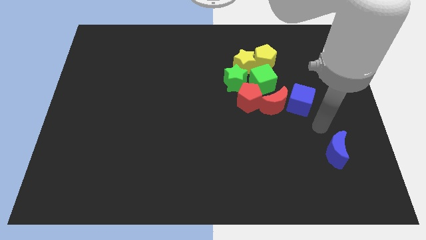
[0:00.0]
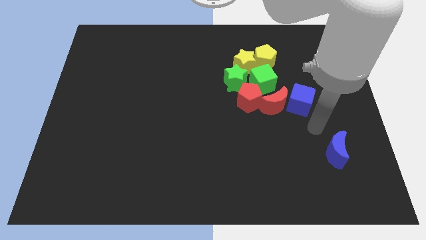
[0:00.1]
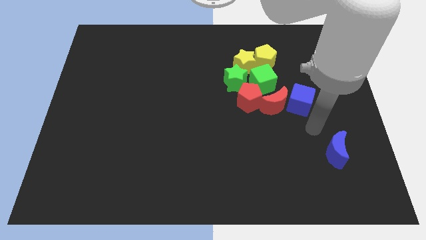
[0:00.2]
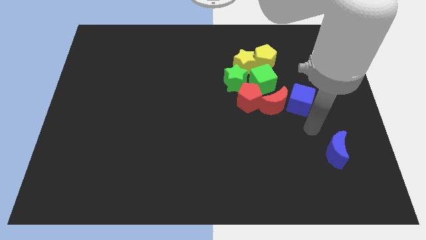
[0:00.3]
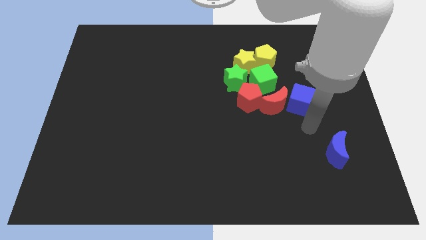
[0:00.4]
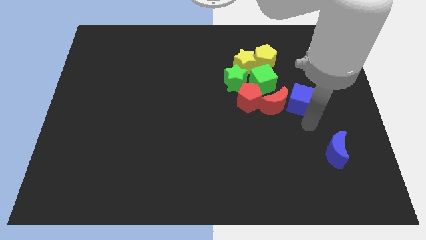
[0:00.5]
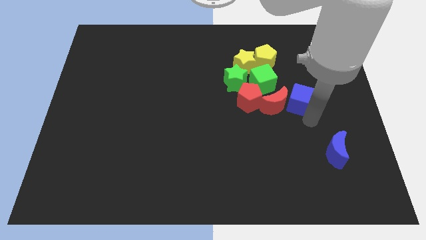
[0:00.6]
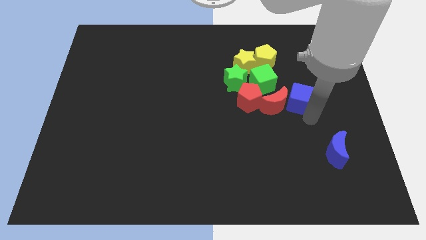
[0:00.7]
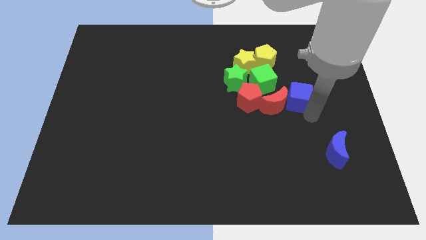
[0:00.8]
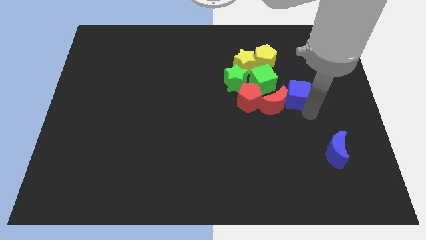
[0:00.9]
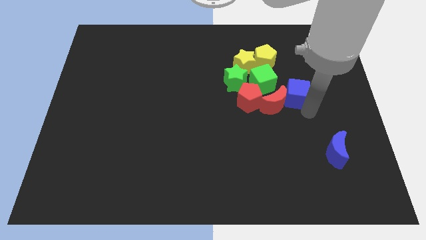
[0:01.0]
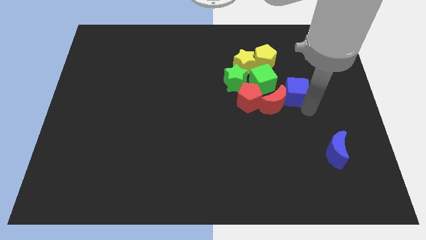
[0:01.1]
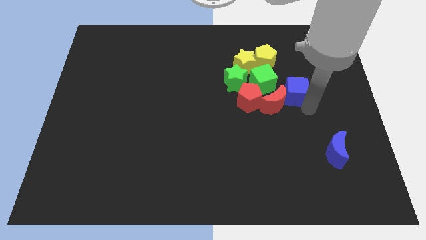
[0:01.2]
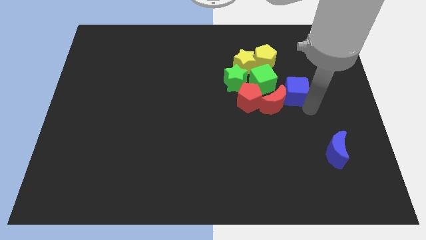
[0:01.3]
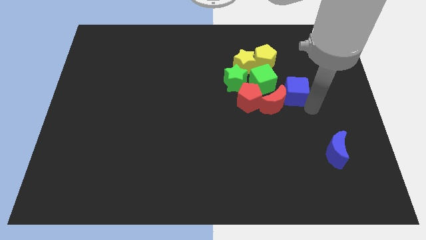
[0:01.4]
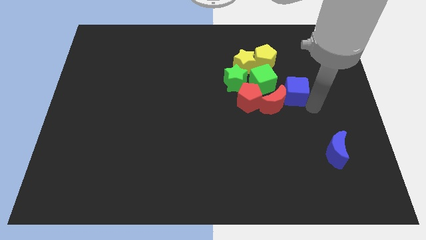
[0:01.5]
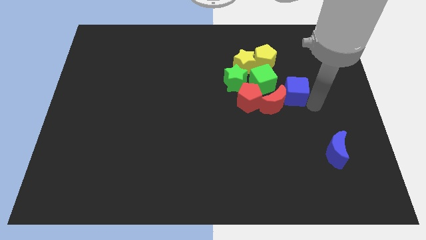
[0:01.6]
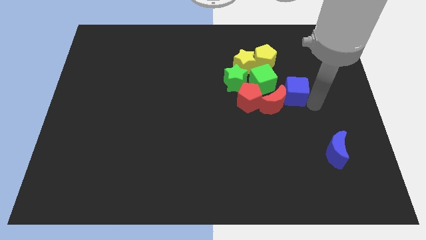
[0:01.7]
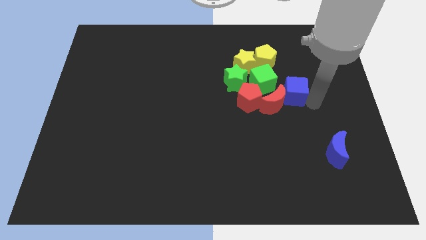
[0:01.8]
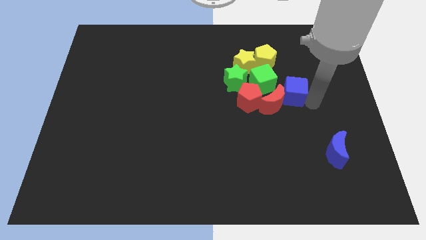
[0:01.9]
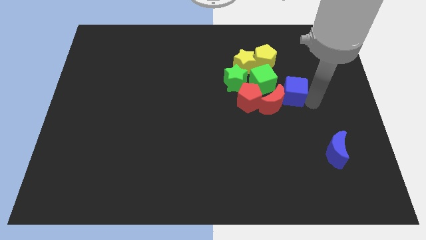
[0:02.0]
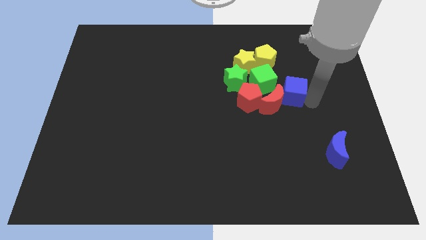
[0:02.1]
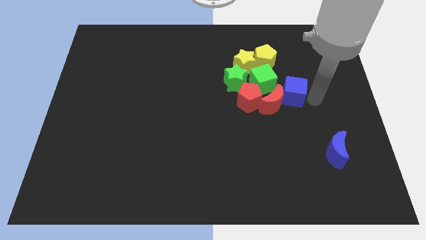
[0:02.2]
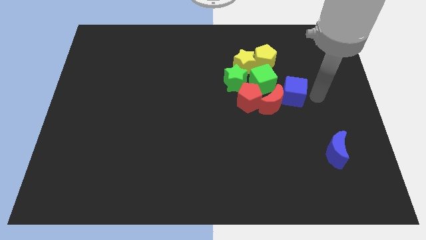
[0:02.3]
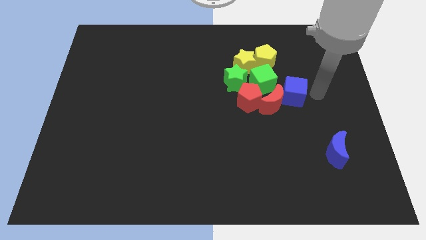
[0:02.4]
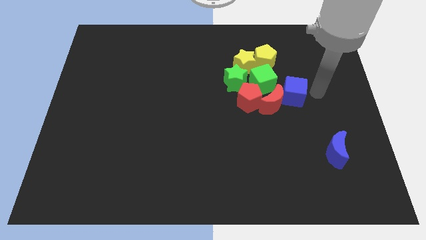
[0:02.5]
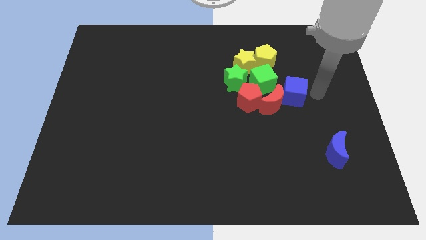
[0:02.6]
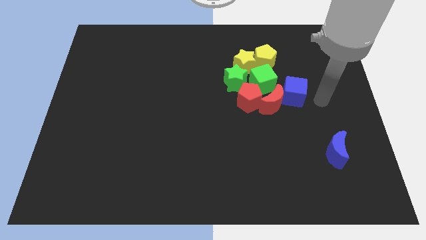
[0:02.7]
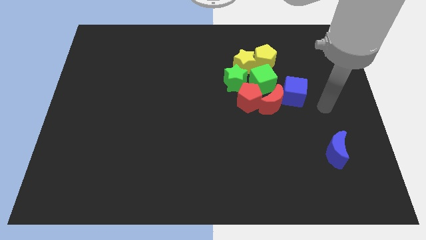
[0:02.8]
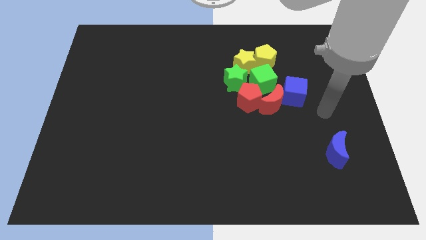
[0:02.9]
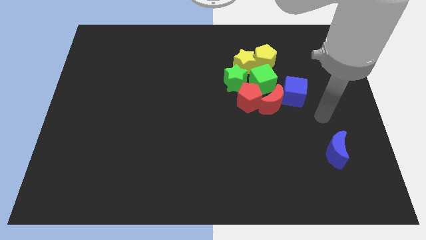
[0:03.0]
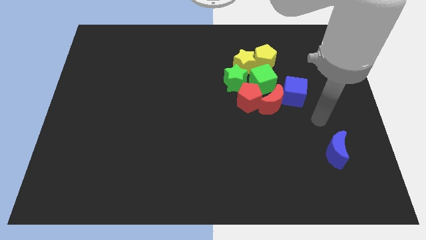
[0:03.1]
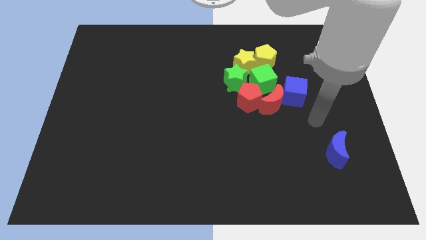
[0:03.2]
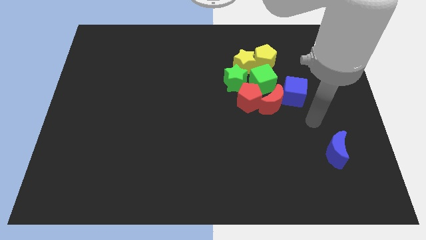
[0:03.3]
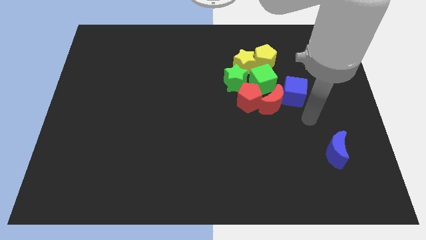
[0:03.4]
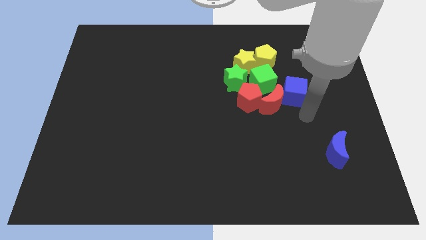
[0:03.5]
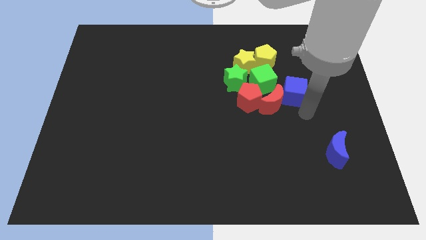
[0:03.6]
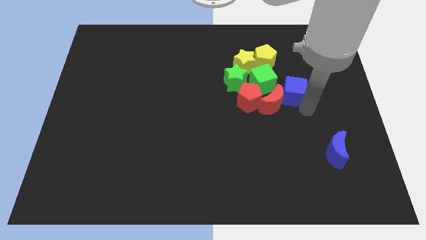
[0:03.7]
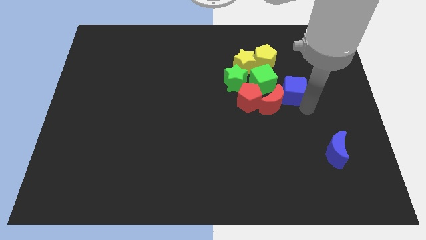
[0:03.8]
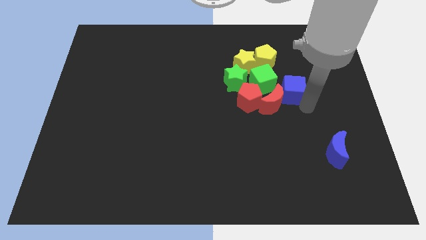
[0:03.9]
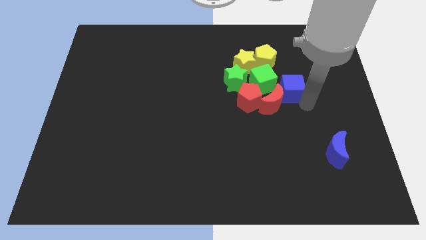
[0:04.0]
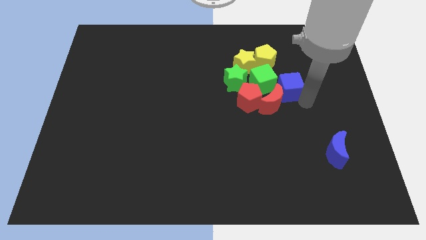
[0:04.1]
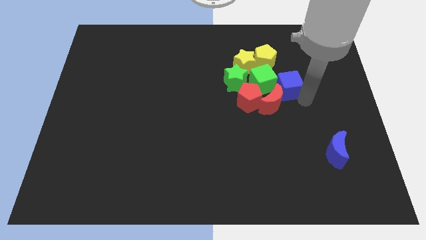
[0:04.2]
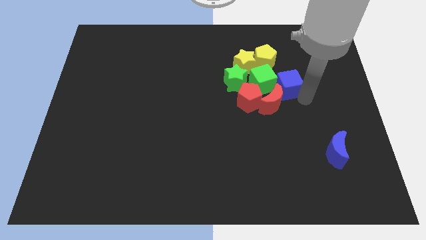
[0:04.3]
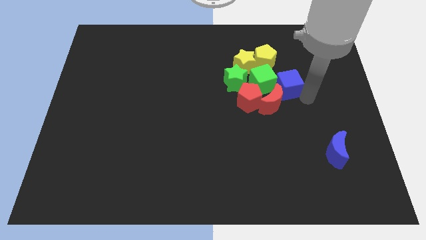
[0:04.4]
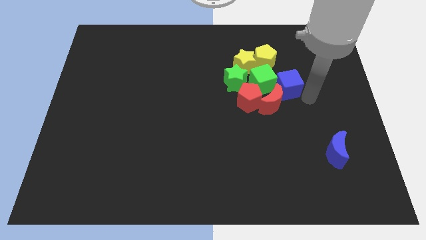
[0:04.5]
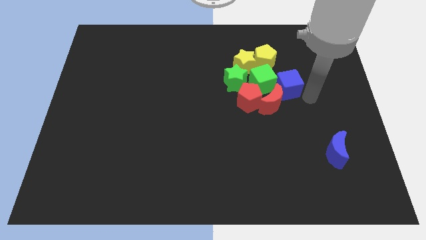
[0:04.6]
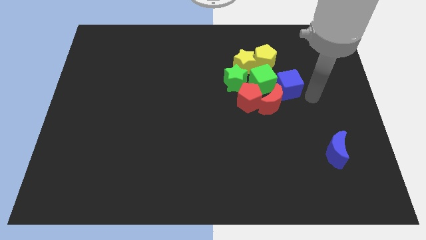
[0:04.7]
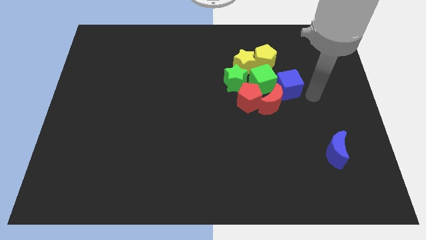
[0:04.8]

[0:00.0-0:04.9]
place the blue cube right to the green cube

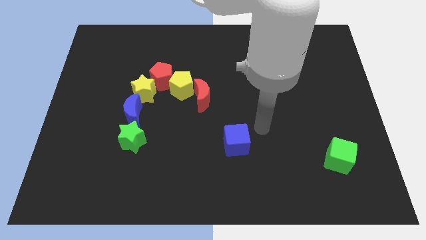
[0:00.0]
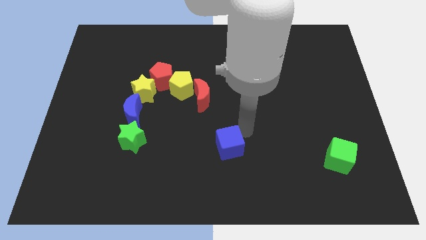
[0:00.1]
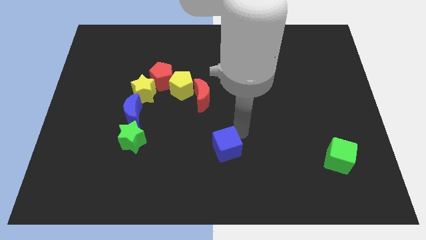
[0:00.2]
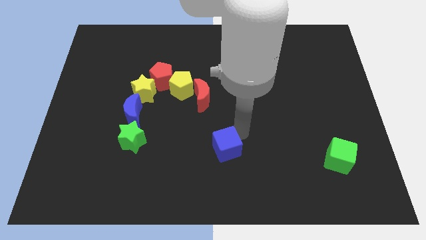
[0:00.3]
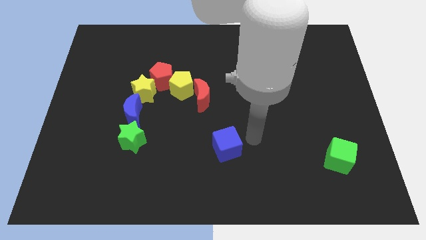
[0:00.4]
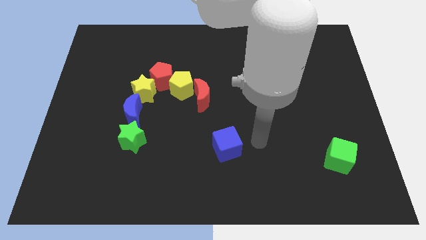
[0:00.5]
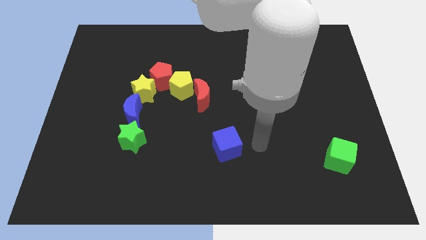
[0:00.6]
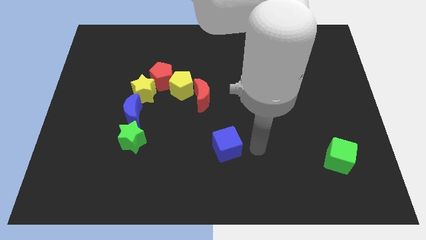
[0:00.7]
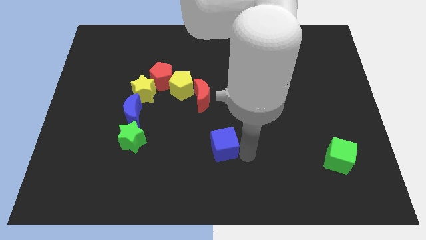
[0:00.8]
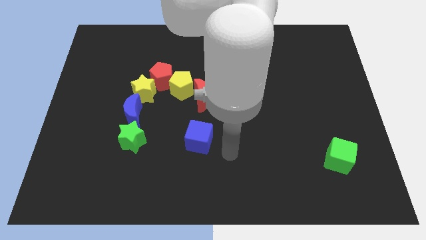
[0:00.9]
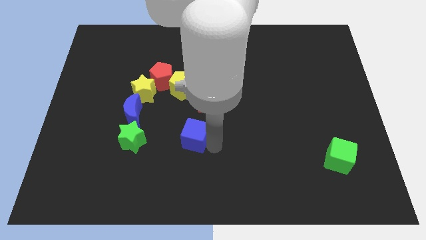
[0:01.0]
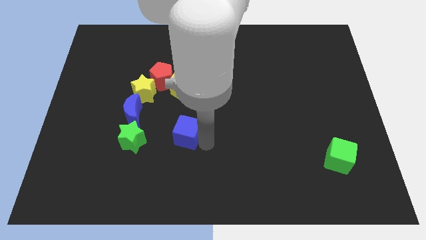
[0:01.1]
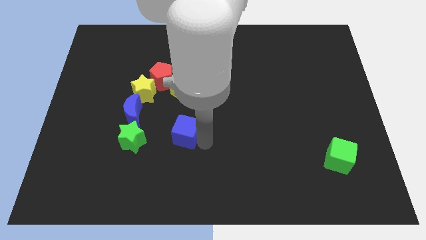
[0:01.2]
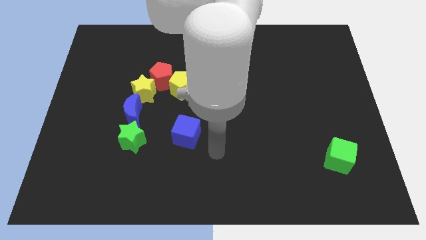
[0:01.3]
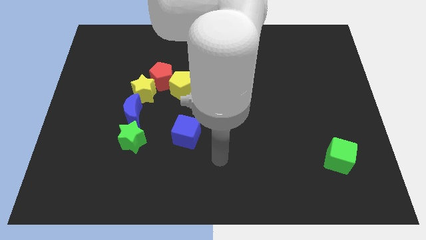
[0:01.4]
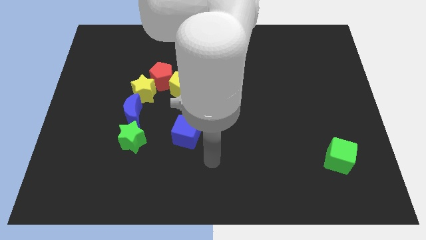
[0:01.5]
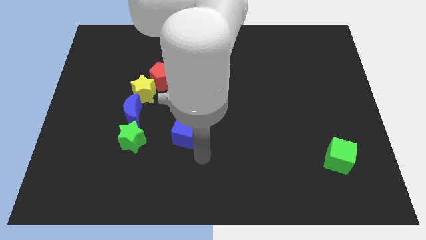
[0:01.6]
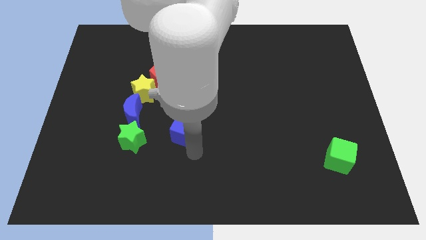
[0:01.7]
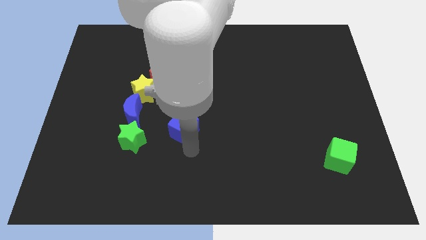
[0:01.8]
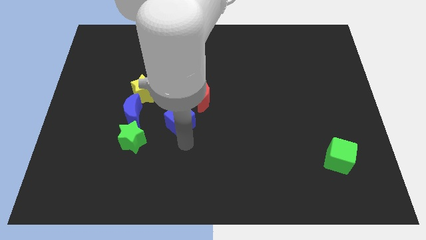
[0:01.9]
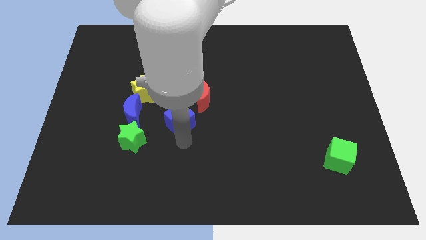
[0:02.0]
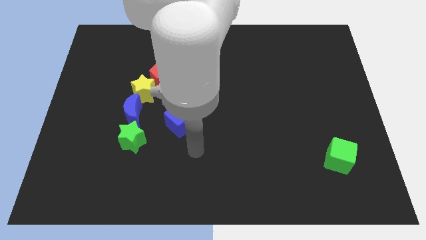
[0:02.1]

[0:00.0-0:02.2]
place blue cube to right of blue moon

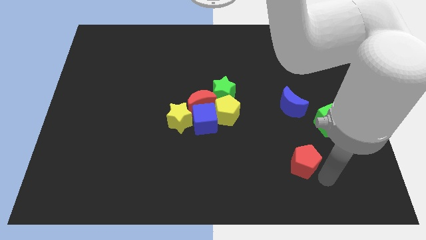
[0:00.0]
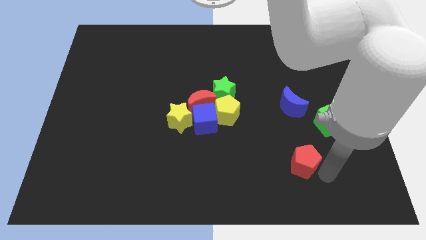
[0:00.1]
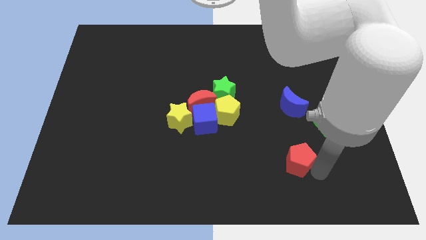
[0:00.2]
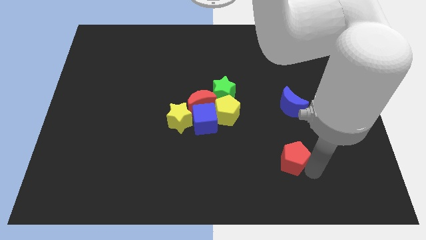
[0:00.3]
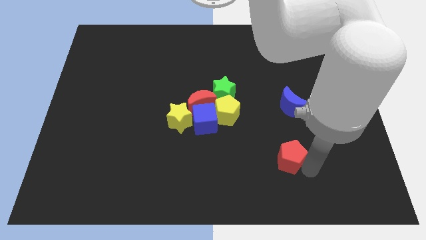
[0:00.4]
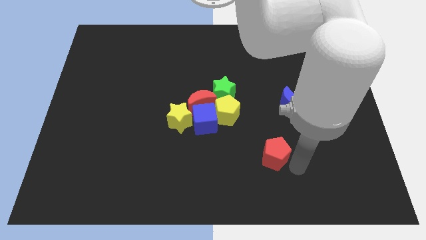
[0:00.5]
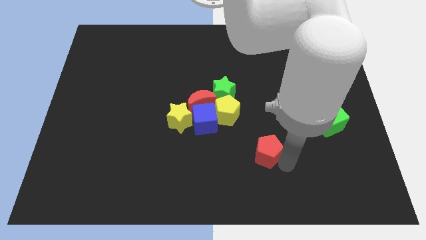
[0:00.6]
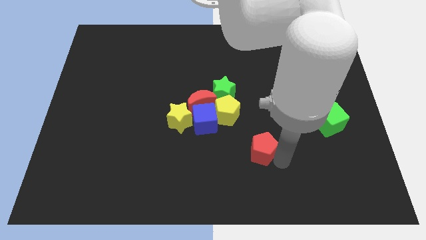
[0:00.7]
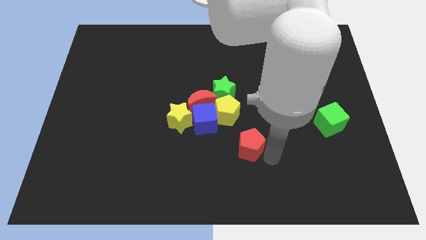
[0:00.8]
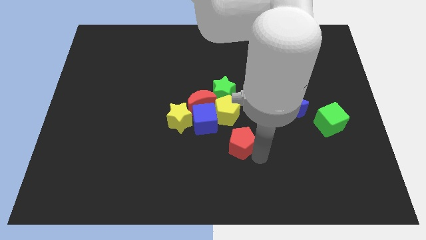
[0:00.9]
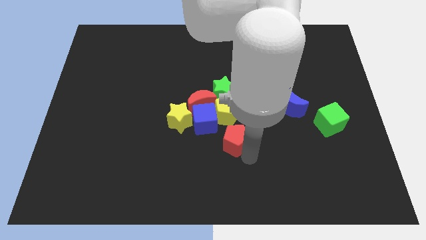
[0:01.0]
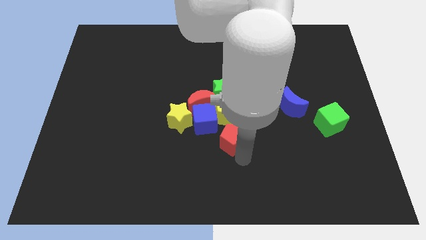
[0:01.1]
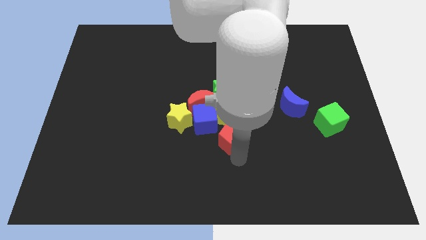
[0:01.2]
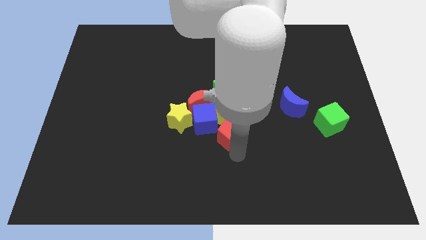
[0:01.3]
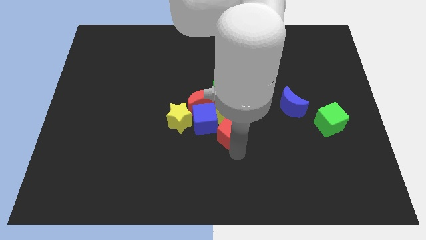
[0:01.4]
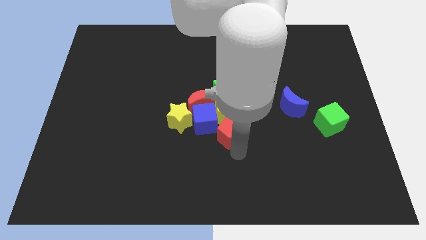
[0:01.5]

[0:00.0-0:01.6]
move the red pentagon below the yellow pentagon

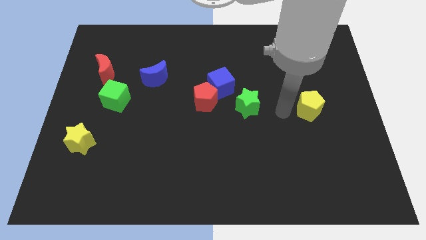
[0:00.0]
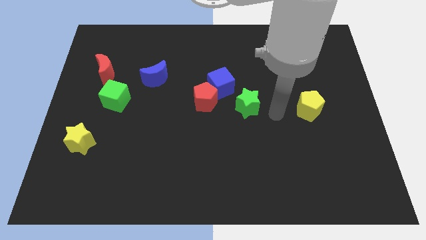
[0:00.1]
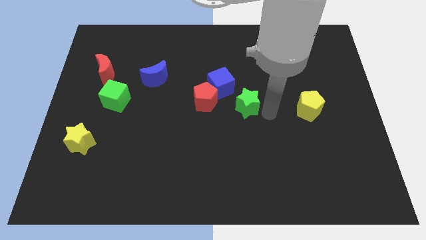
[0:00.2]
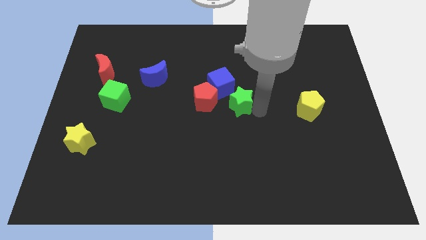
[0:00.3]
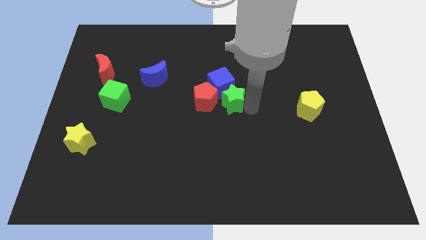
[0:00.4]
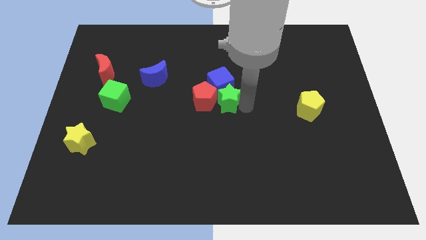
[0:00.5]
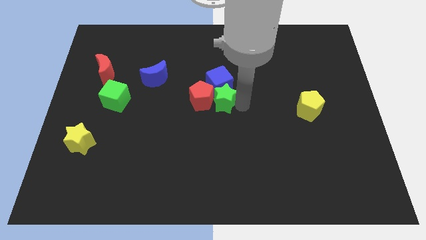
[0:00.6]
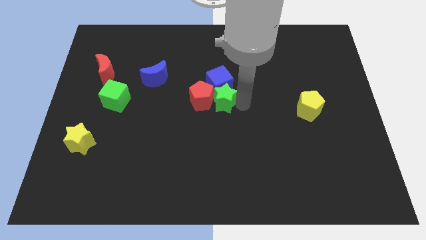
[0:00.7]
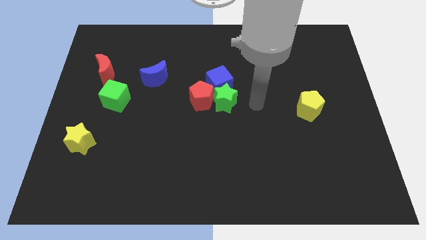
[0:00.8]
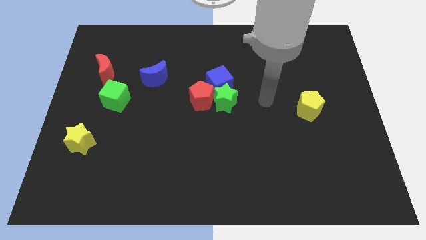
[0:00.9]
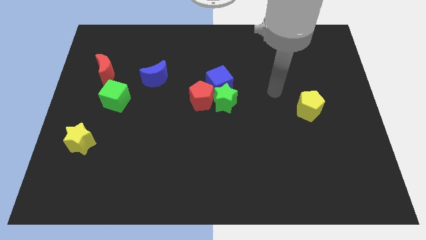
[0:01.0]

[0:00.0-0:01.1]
push the green star into the red pentagon and blue cube
